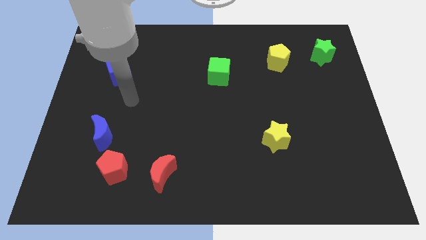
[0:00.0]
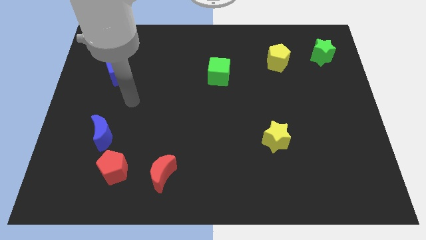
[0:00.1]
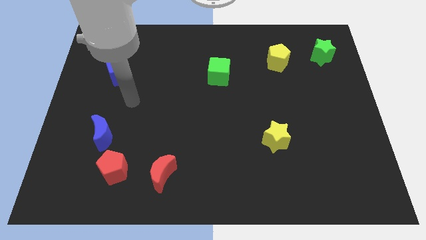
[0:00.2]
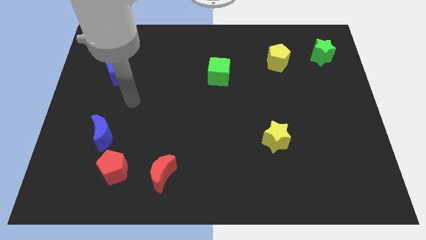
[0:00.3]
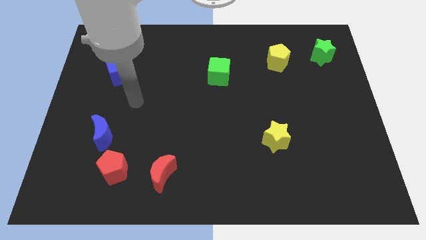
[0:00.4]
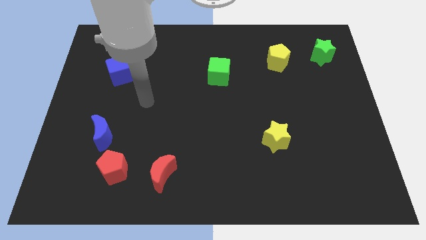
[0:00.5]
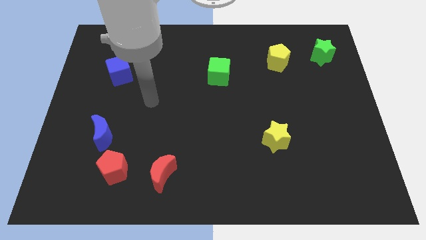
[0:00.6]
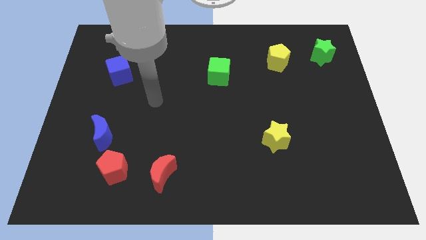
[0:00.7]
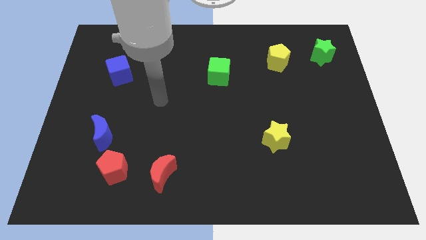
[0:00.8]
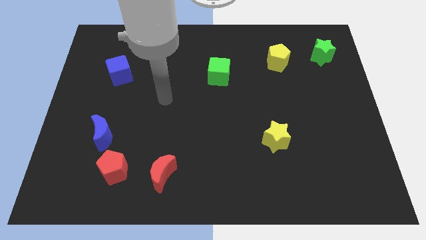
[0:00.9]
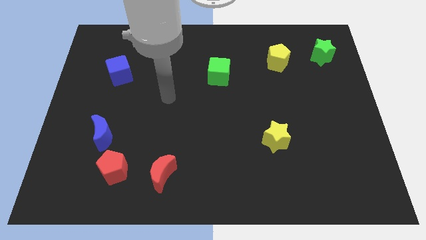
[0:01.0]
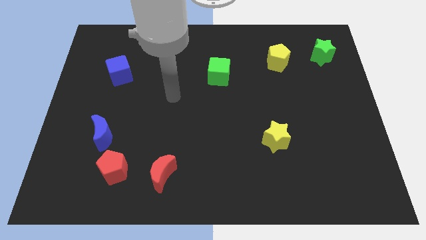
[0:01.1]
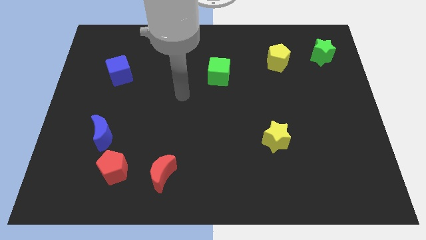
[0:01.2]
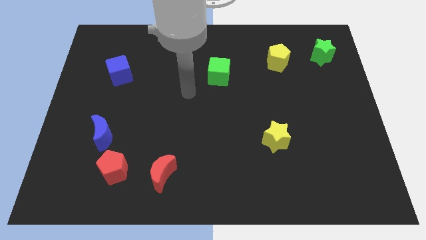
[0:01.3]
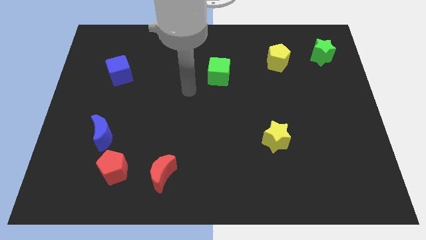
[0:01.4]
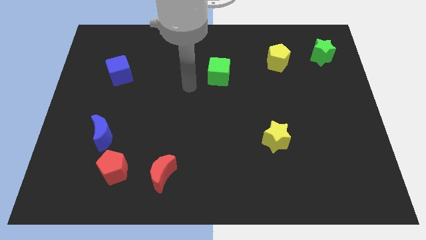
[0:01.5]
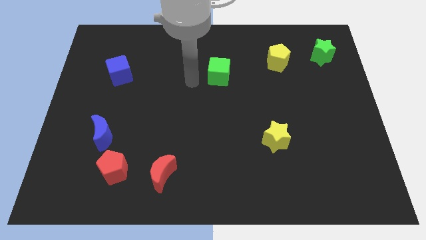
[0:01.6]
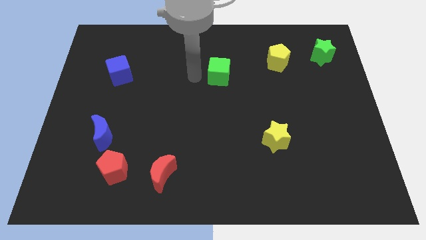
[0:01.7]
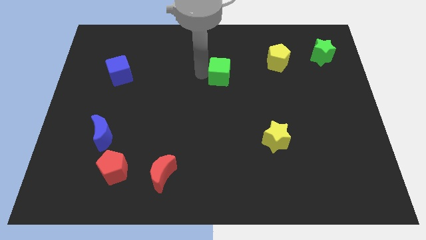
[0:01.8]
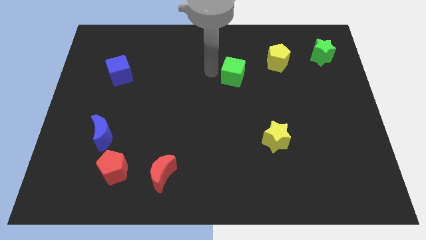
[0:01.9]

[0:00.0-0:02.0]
move the arm towards the green cube

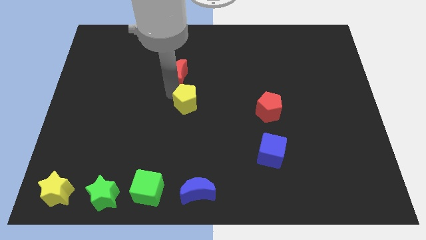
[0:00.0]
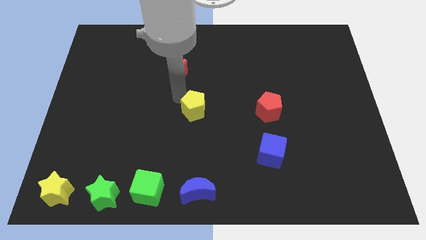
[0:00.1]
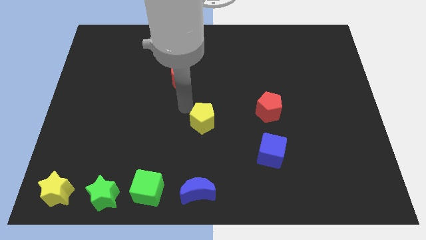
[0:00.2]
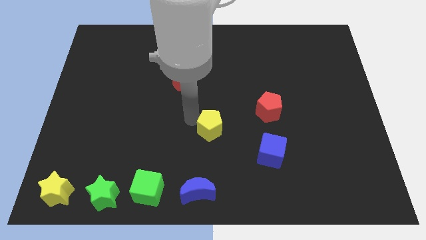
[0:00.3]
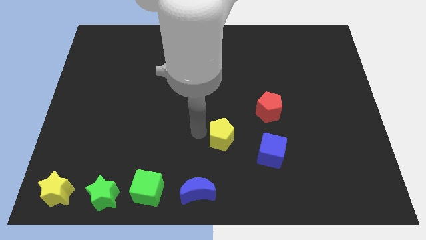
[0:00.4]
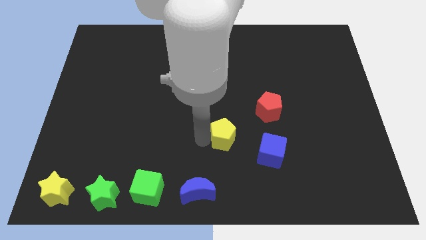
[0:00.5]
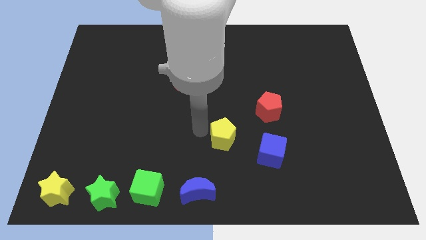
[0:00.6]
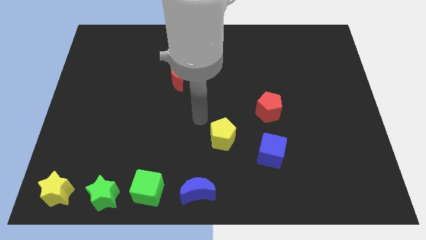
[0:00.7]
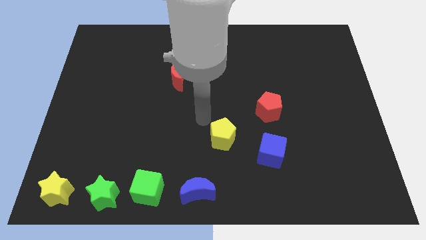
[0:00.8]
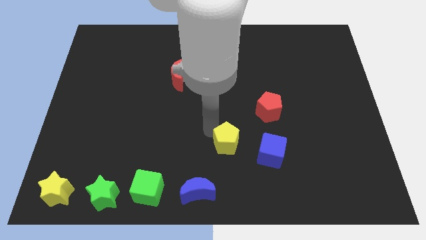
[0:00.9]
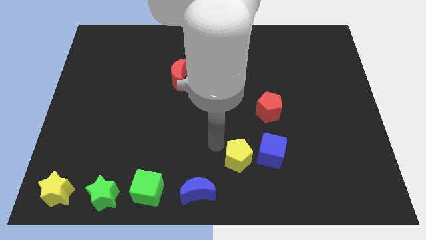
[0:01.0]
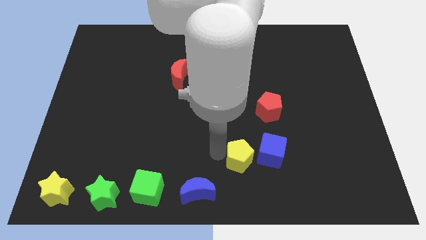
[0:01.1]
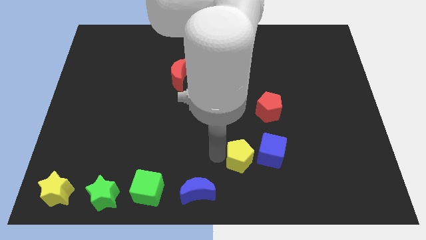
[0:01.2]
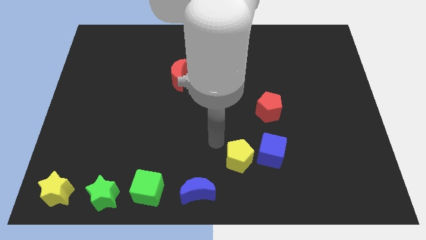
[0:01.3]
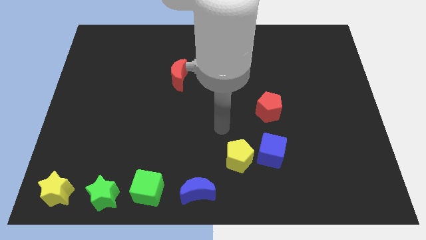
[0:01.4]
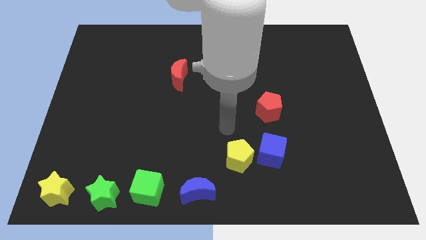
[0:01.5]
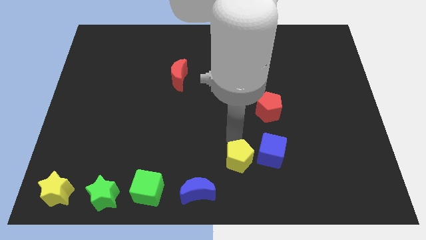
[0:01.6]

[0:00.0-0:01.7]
move the yellow pentagon left to the blue cube

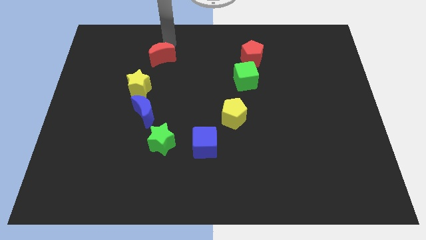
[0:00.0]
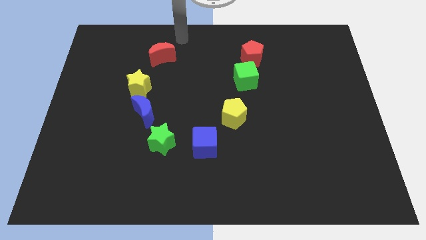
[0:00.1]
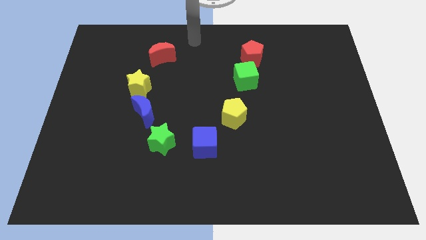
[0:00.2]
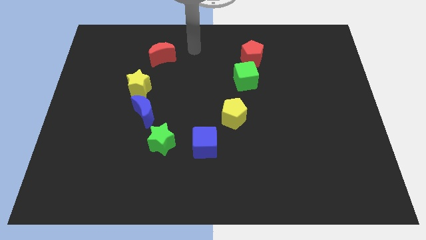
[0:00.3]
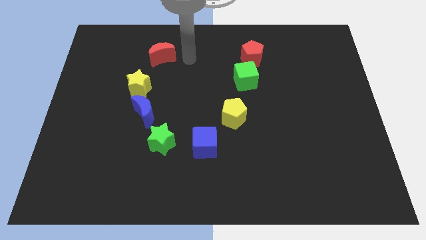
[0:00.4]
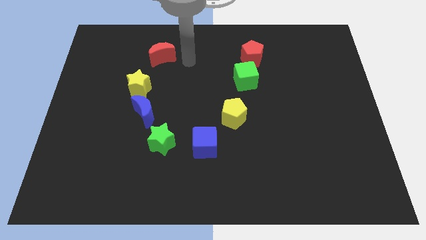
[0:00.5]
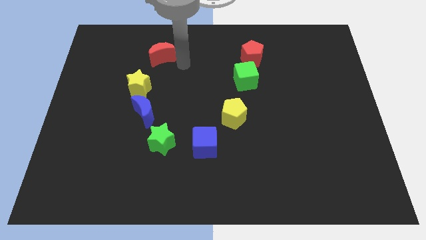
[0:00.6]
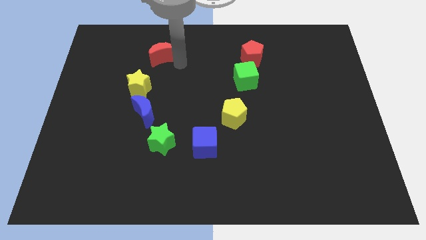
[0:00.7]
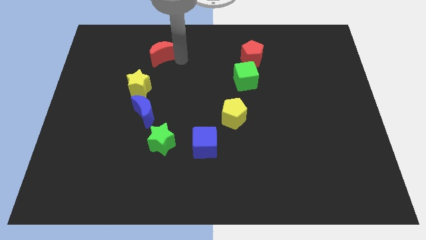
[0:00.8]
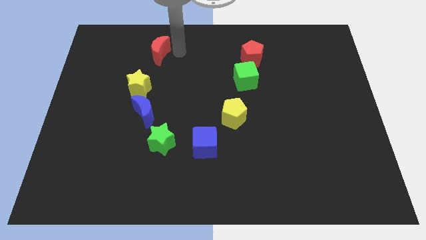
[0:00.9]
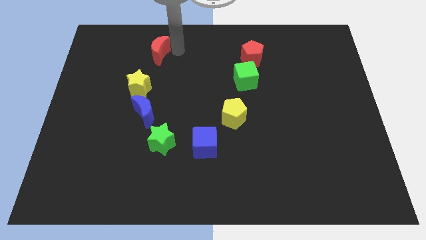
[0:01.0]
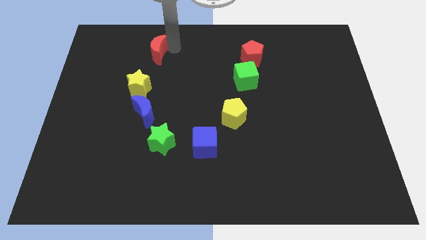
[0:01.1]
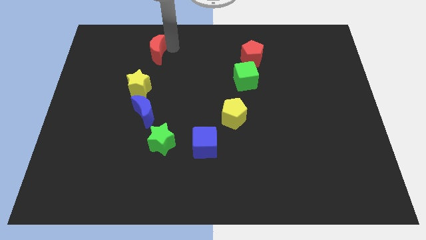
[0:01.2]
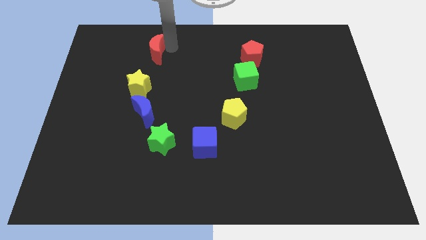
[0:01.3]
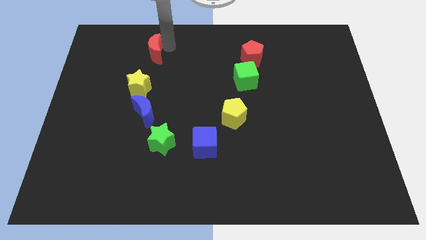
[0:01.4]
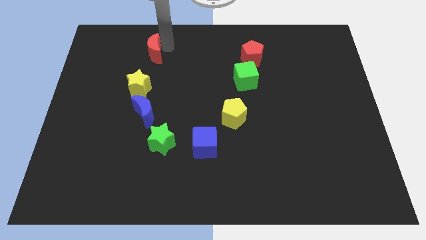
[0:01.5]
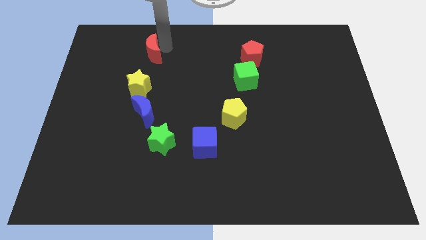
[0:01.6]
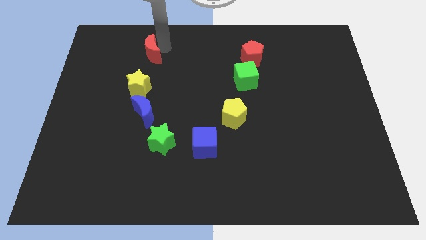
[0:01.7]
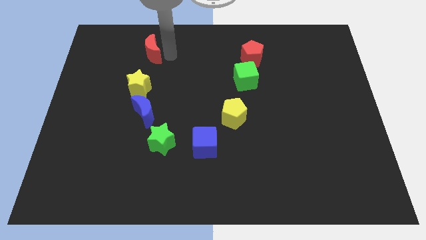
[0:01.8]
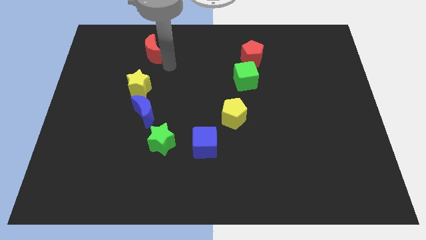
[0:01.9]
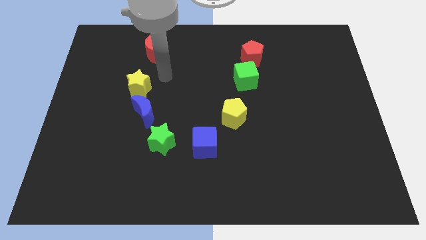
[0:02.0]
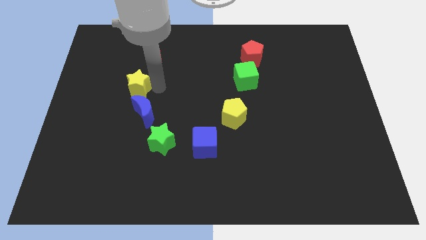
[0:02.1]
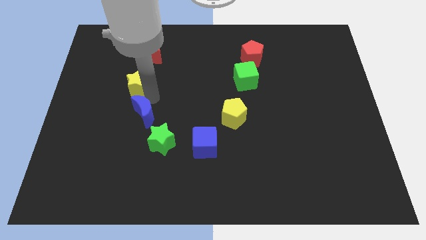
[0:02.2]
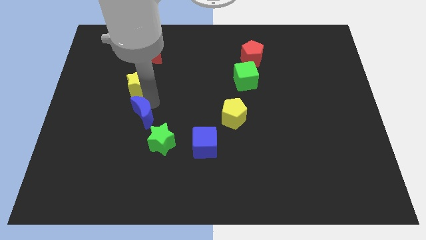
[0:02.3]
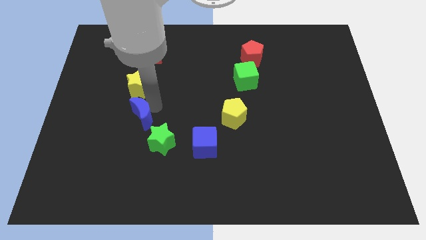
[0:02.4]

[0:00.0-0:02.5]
slightly move the red crescent to top of the yellow star

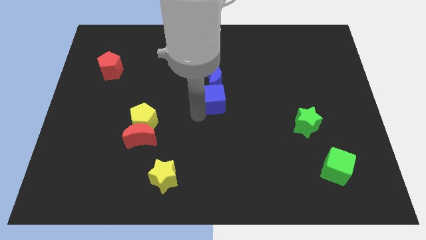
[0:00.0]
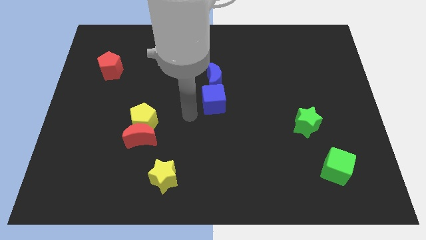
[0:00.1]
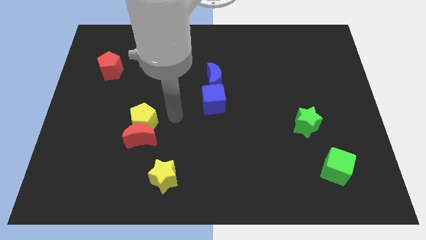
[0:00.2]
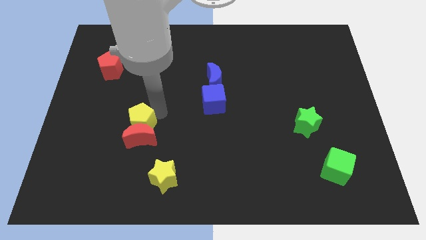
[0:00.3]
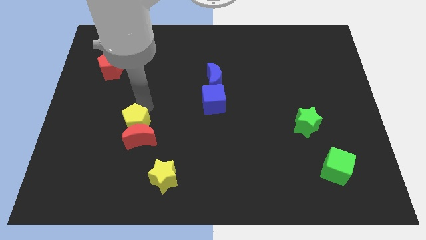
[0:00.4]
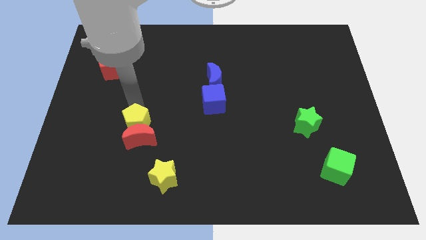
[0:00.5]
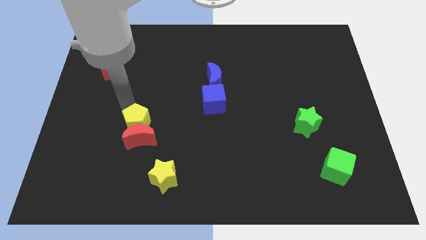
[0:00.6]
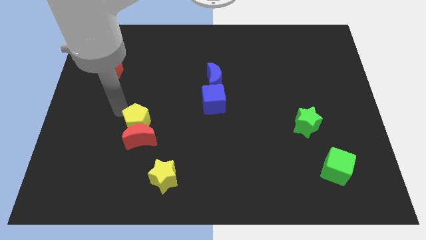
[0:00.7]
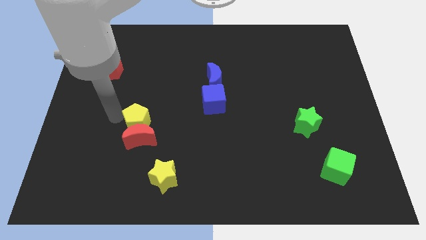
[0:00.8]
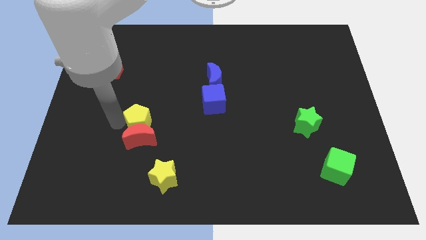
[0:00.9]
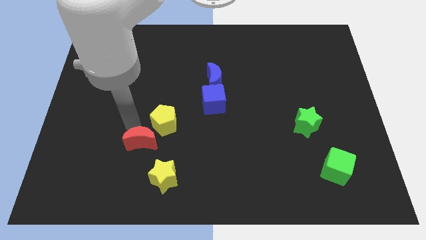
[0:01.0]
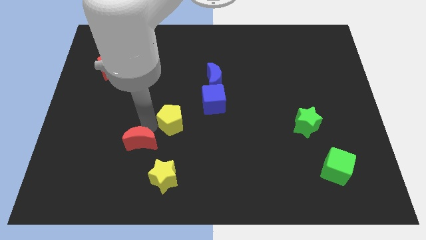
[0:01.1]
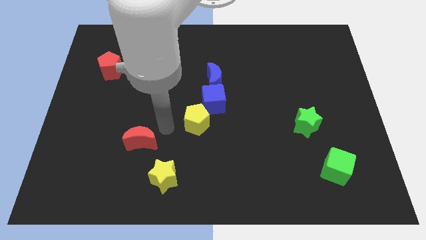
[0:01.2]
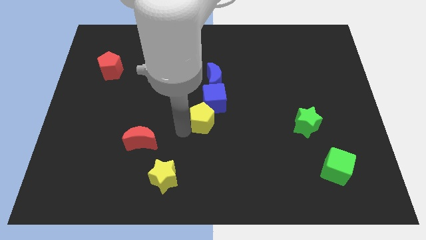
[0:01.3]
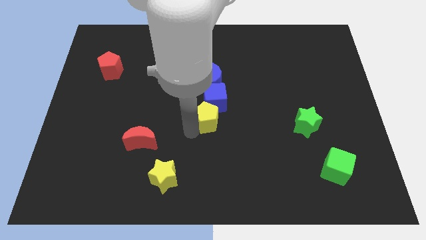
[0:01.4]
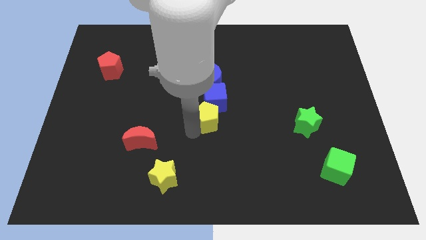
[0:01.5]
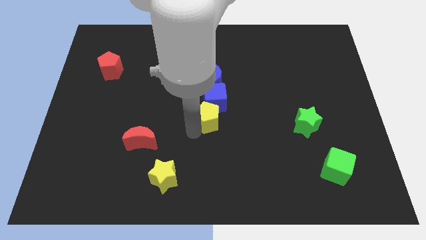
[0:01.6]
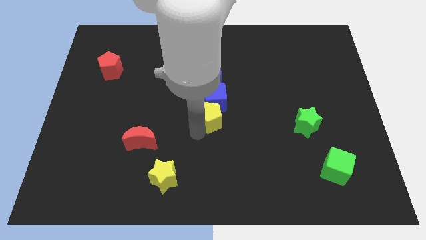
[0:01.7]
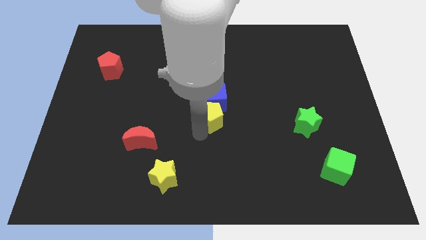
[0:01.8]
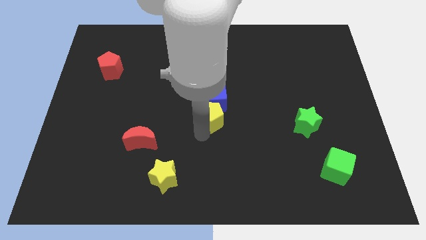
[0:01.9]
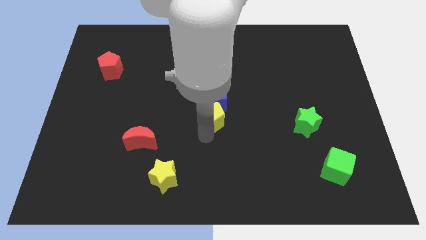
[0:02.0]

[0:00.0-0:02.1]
push the yellow pentagon below blue cube

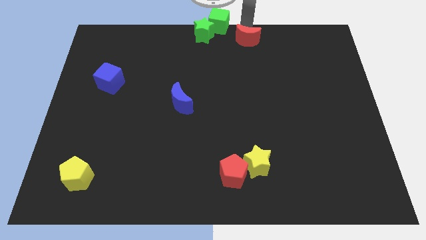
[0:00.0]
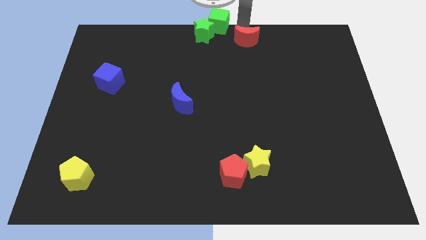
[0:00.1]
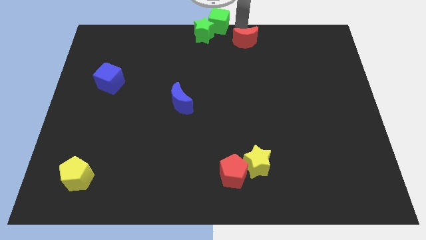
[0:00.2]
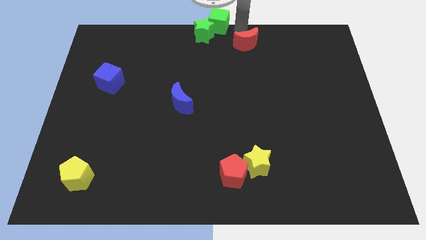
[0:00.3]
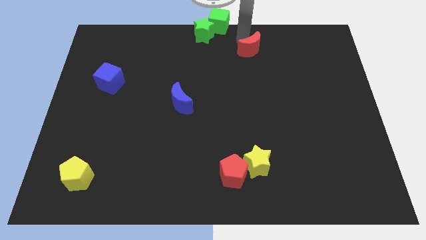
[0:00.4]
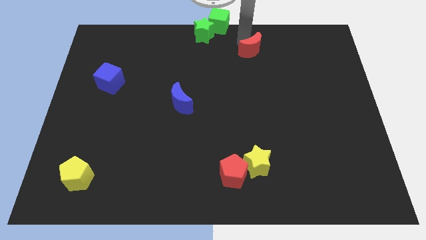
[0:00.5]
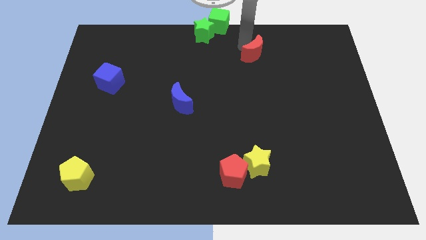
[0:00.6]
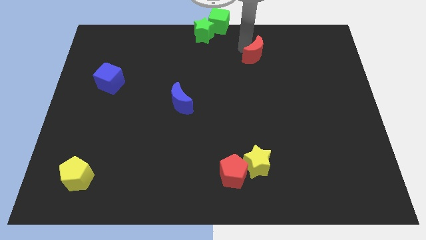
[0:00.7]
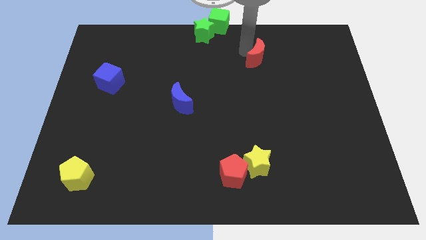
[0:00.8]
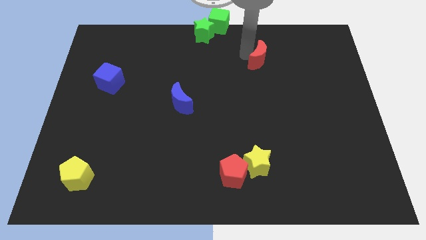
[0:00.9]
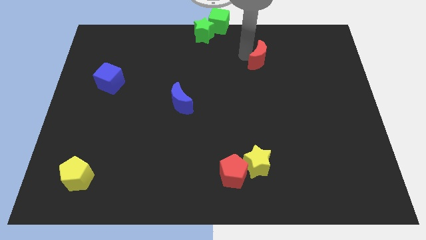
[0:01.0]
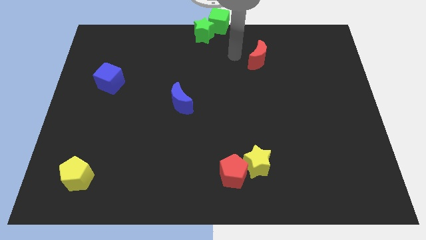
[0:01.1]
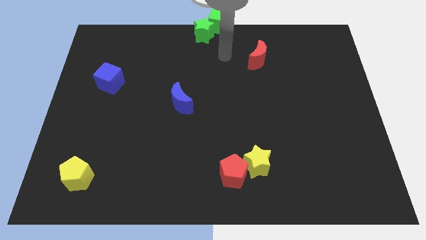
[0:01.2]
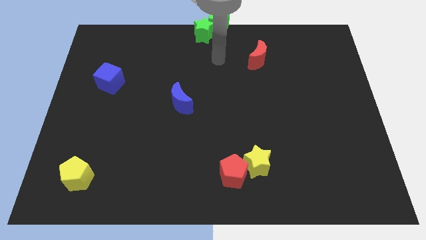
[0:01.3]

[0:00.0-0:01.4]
slightly push the red moon downwards
